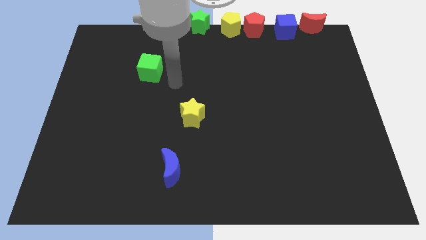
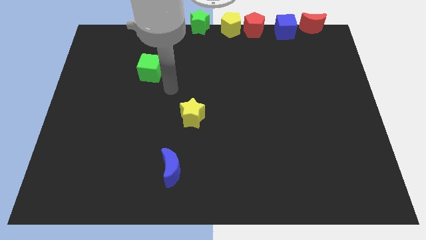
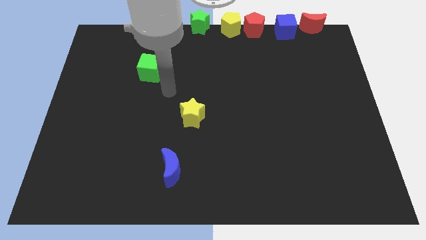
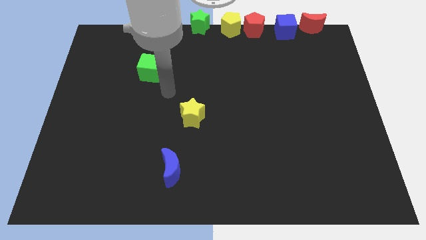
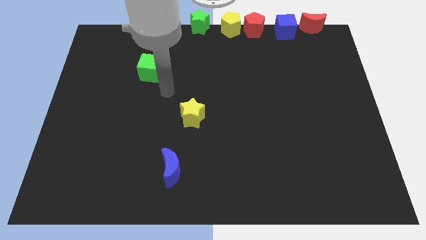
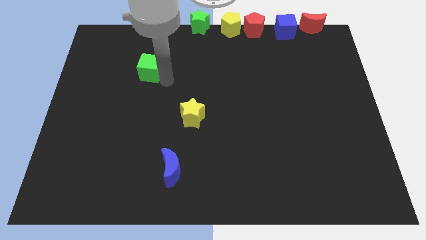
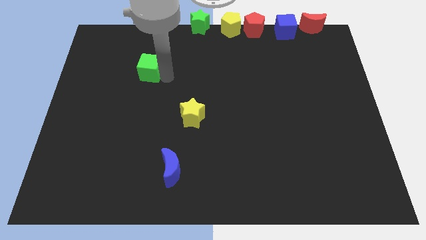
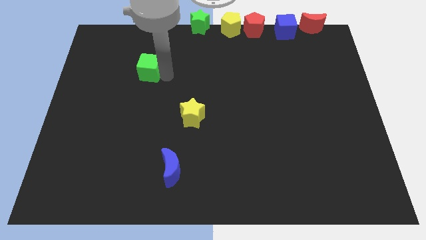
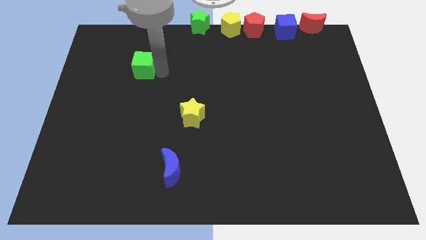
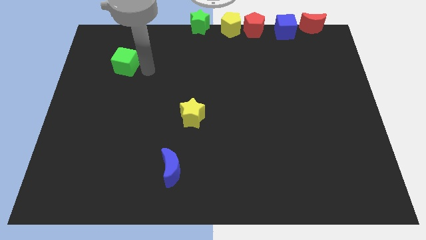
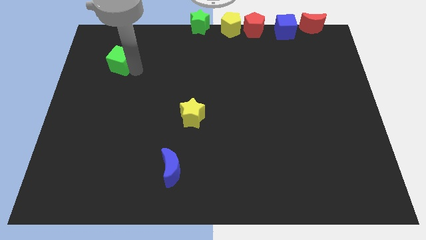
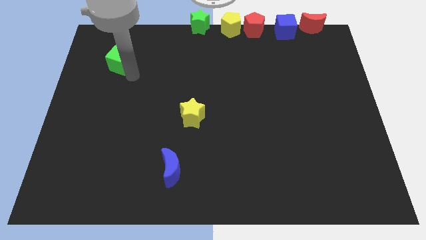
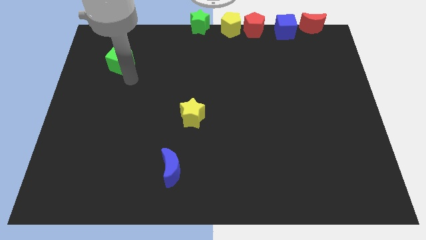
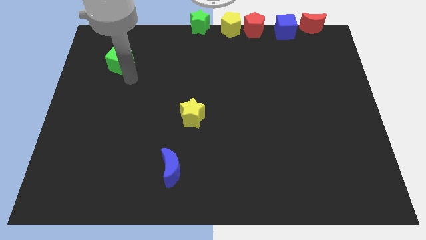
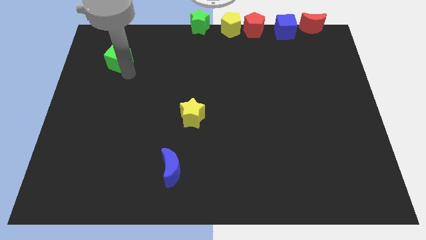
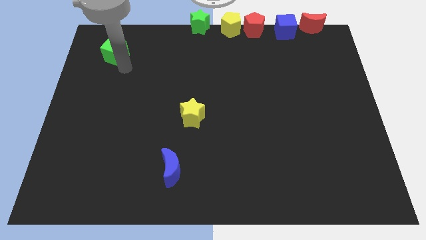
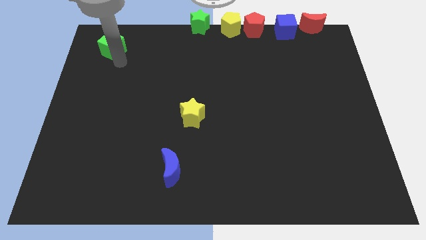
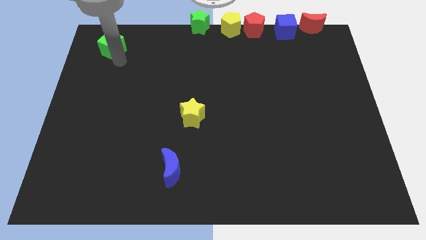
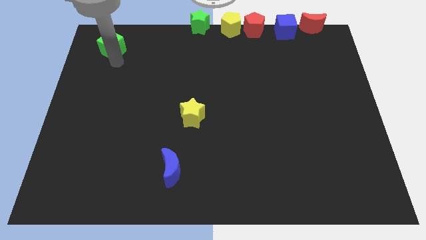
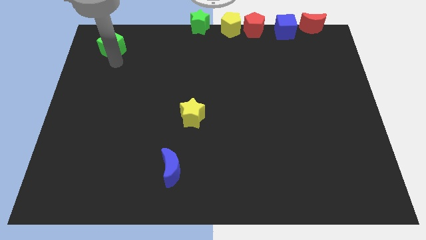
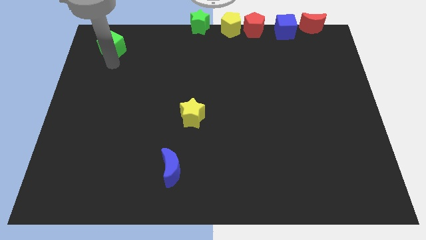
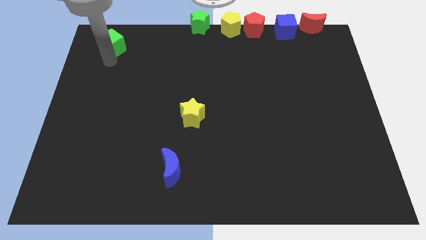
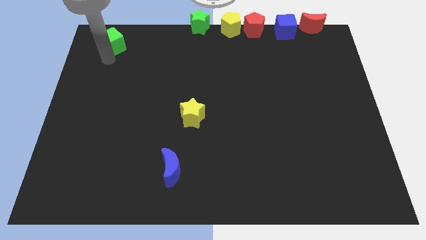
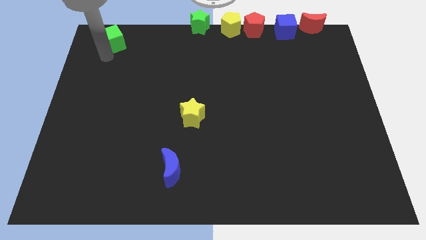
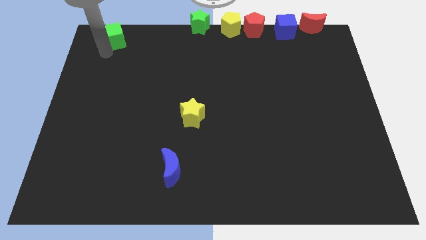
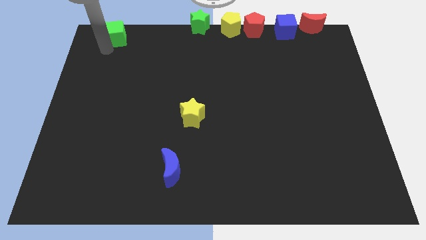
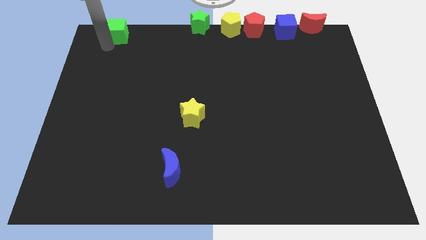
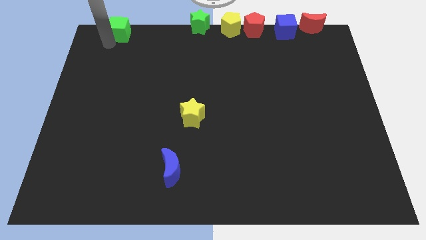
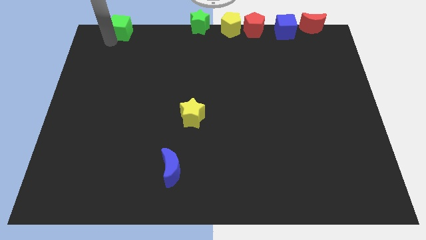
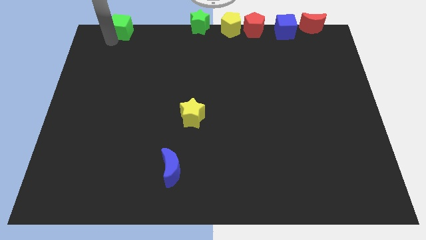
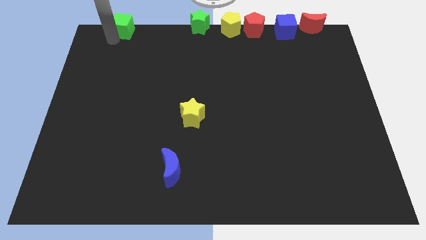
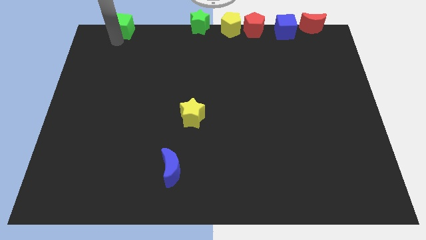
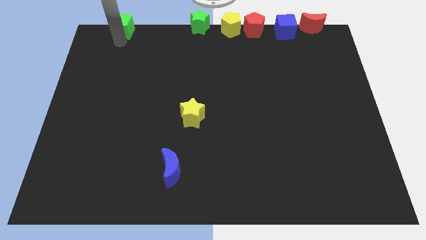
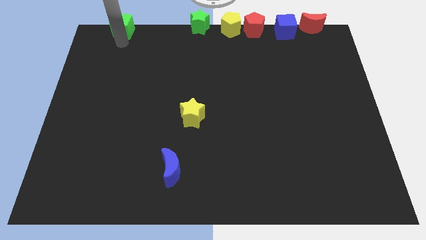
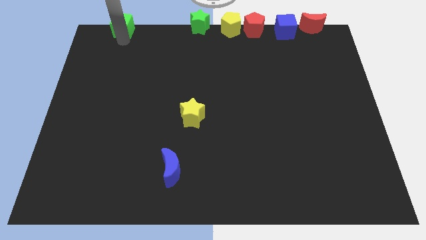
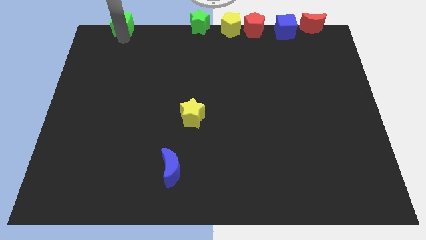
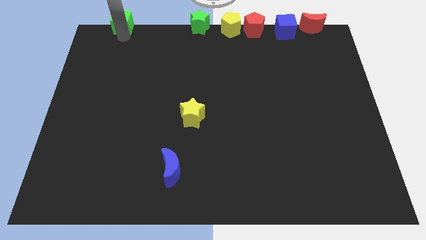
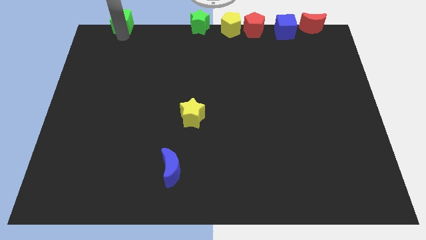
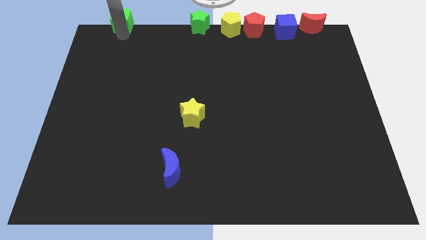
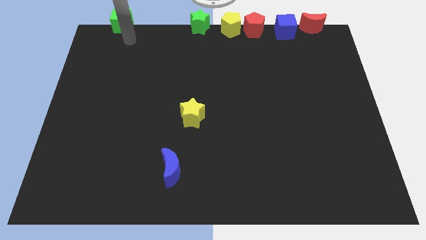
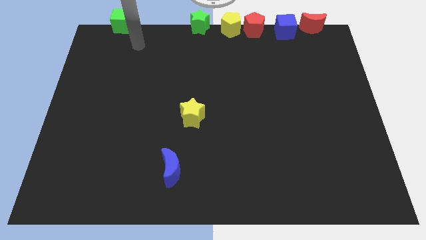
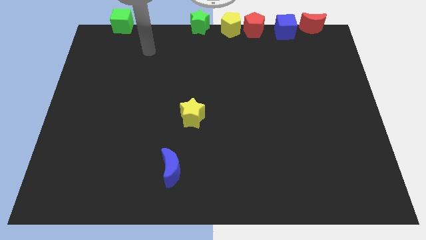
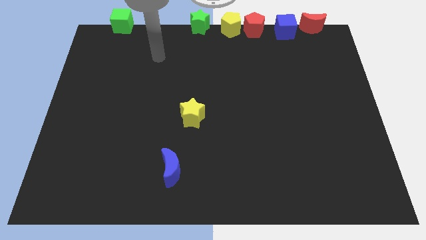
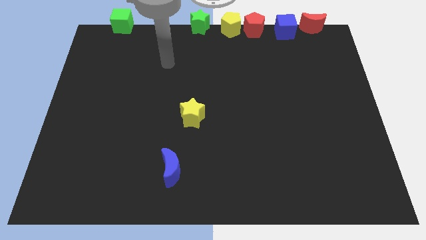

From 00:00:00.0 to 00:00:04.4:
push the green cube towards the top left of the board

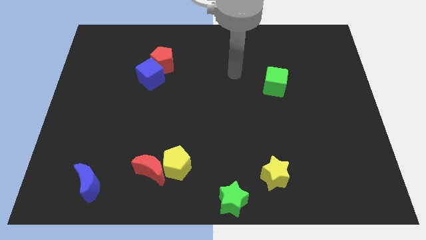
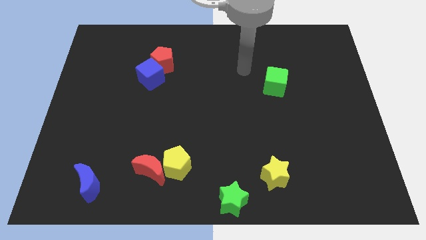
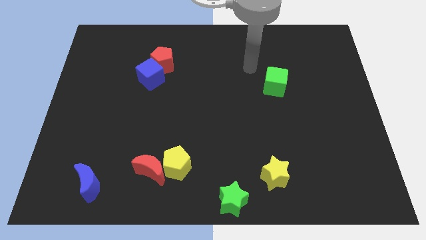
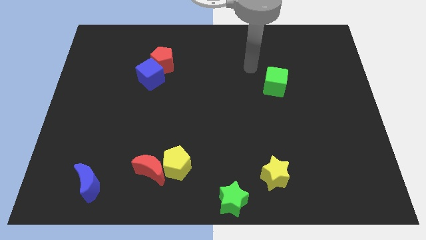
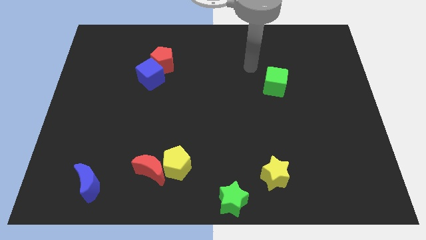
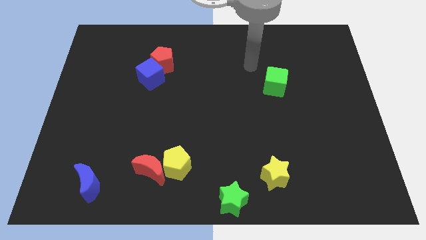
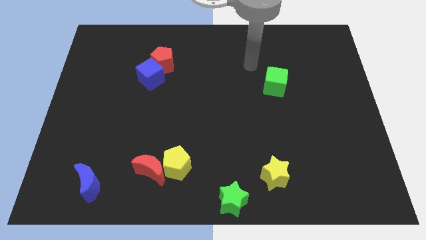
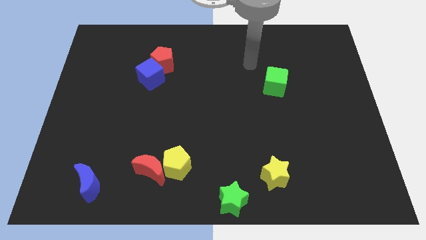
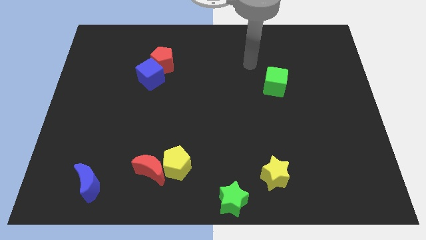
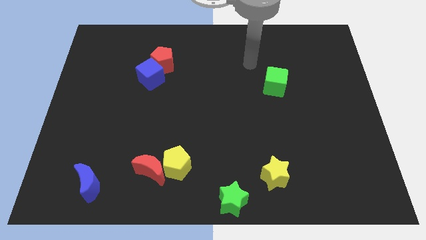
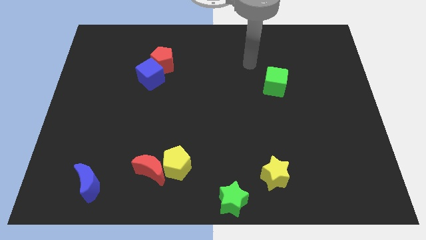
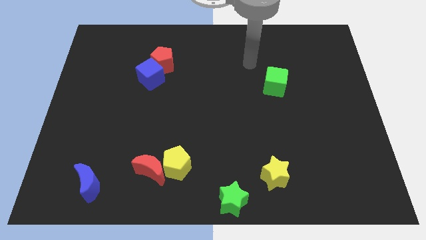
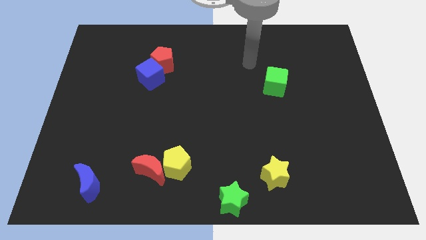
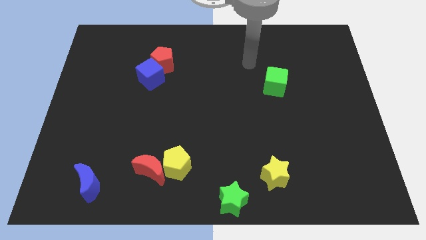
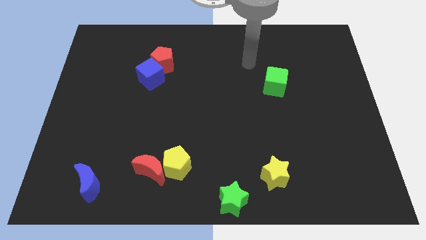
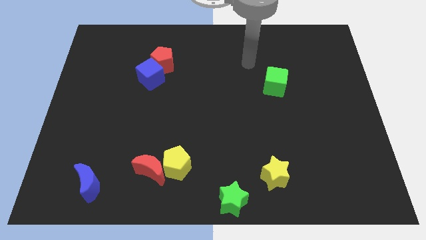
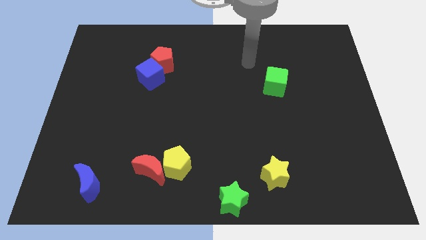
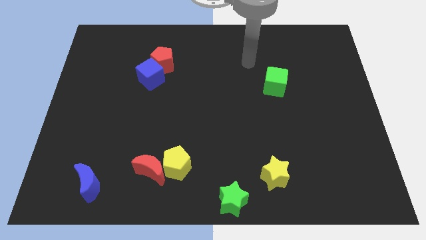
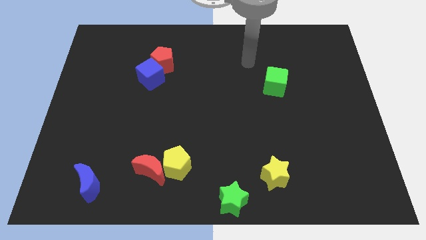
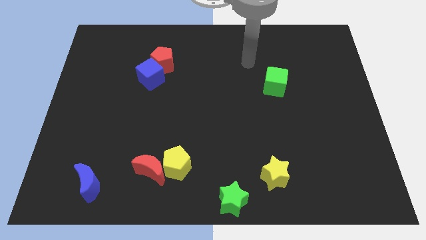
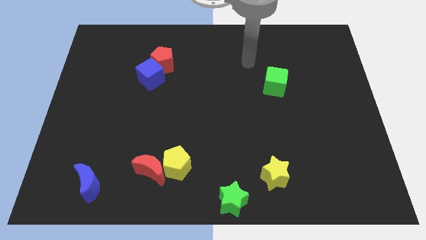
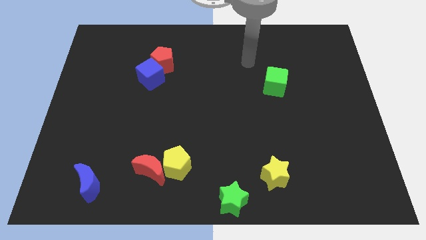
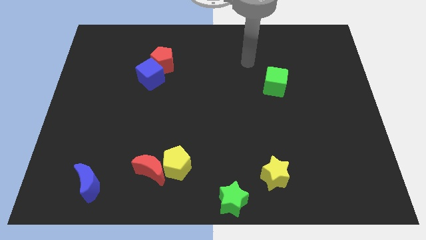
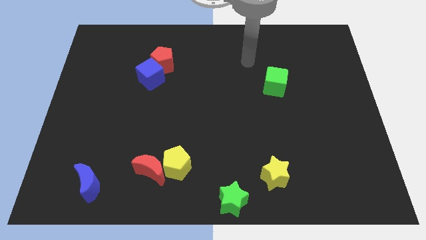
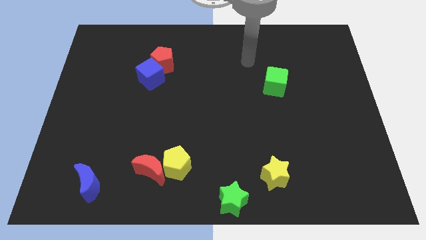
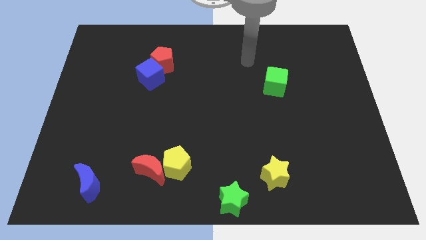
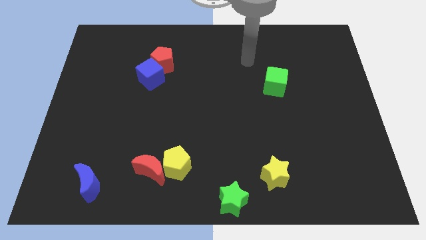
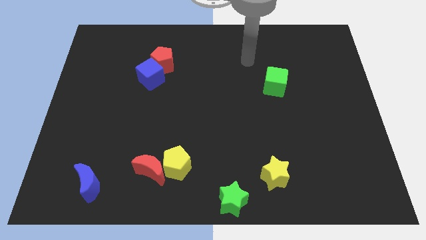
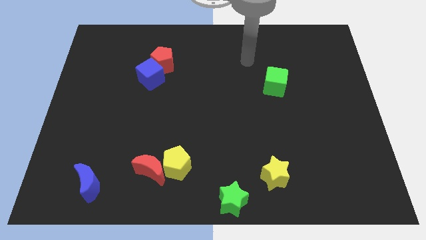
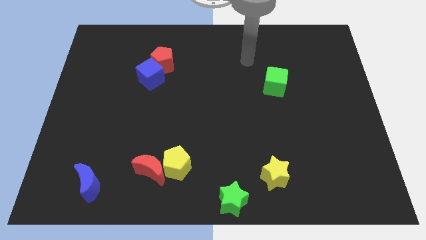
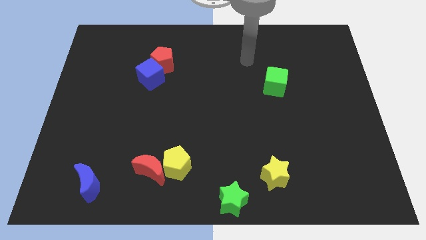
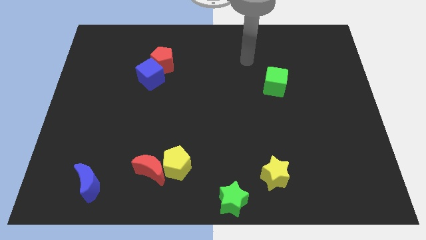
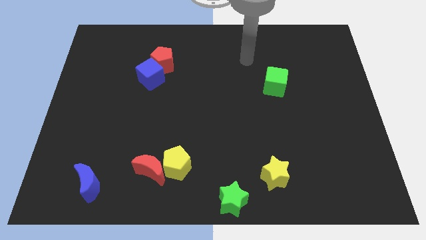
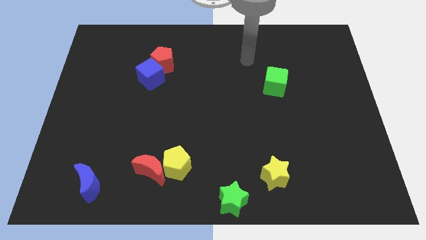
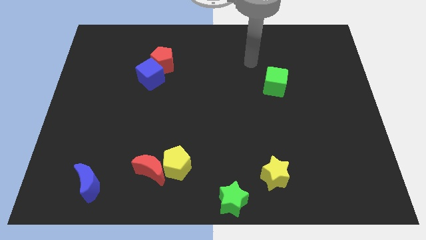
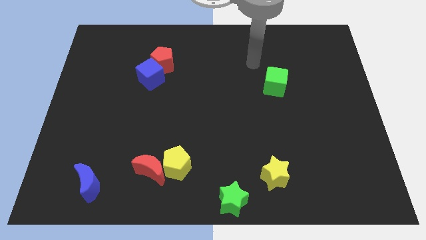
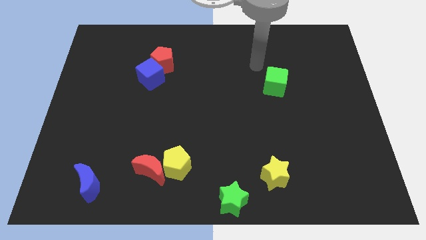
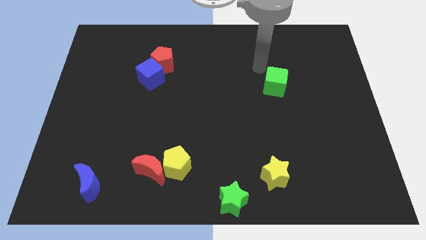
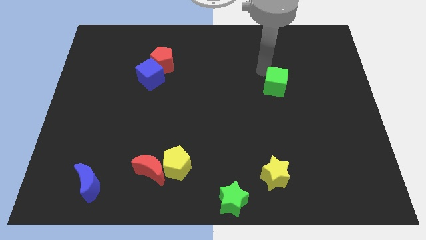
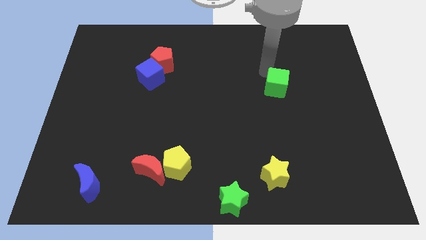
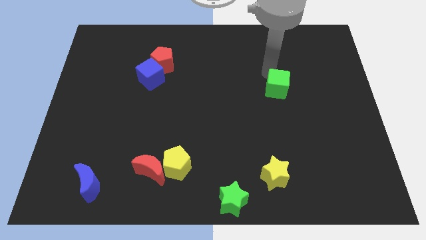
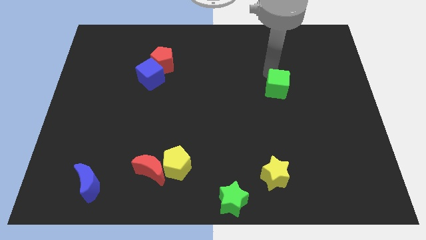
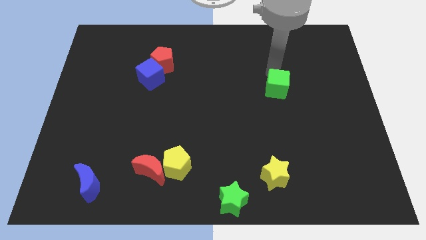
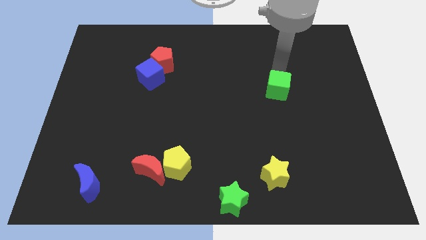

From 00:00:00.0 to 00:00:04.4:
touch the top side of the green cube
